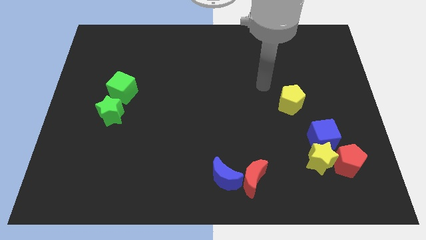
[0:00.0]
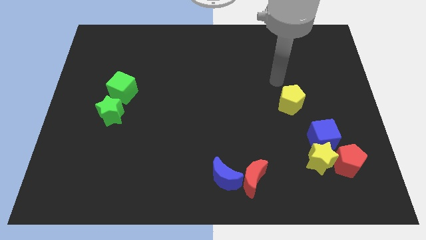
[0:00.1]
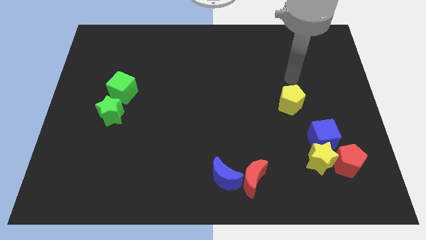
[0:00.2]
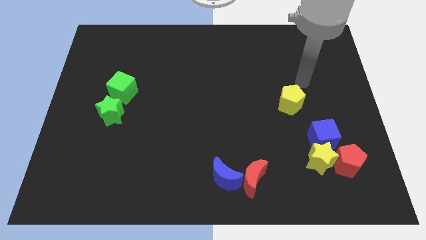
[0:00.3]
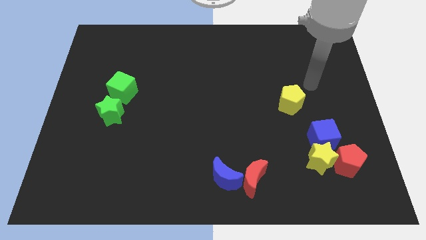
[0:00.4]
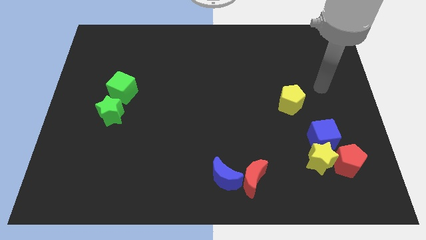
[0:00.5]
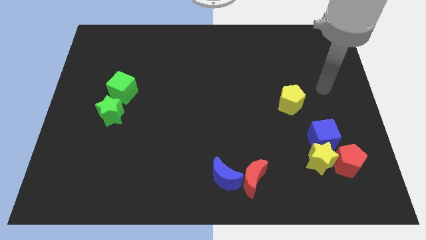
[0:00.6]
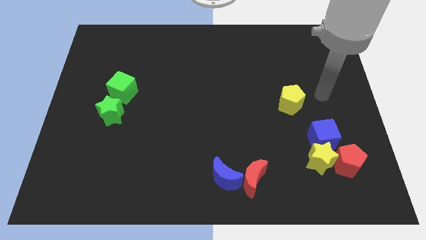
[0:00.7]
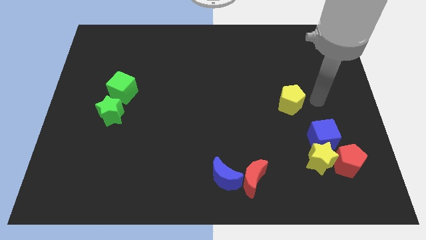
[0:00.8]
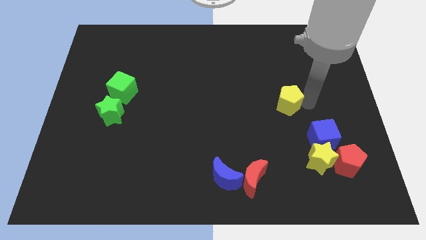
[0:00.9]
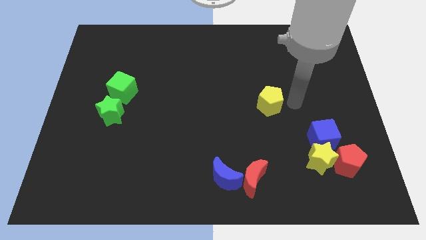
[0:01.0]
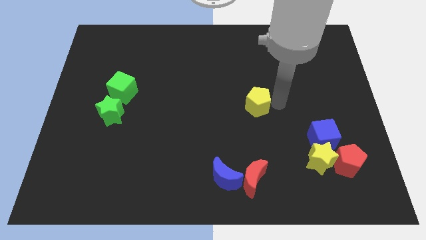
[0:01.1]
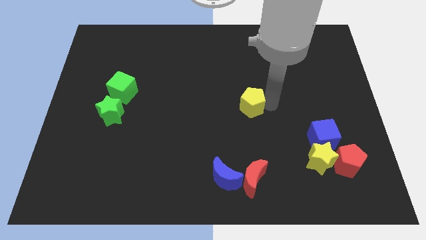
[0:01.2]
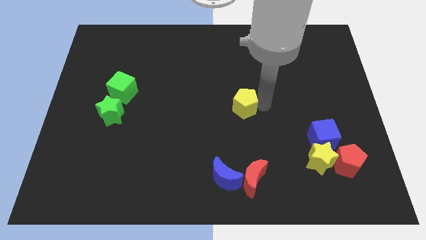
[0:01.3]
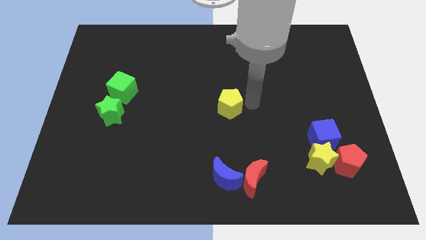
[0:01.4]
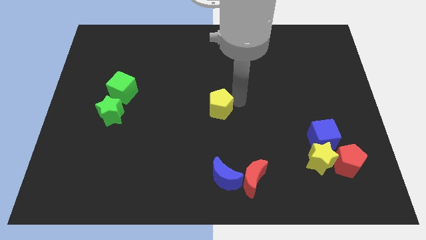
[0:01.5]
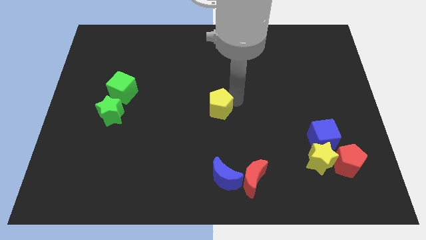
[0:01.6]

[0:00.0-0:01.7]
push the yellow pentagon to the top of the blue crescent

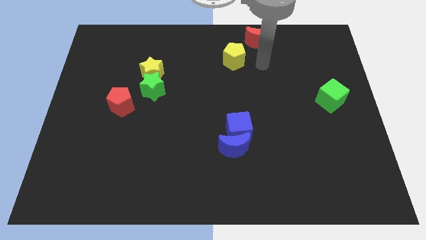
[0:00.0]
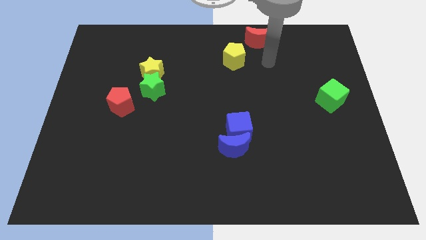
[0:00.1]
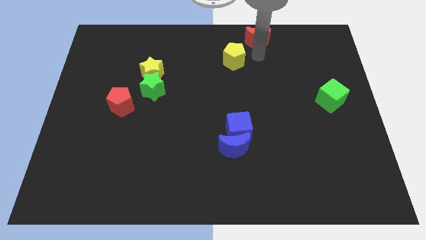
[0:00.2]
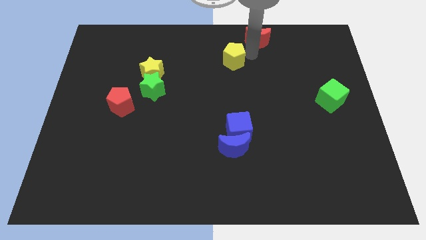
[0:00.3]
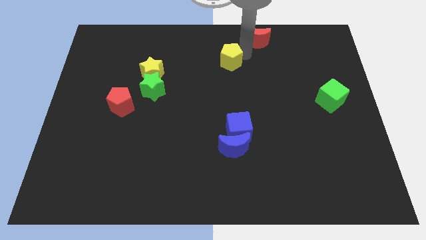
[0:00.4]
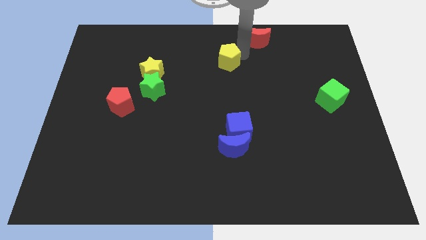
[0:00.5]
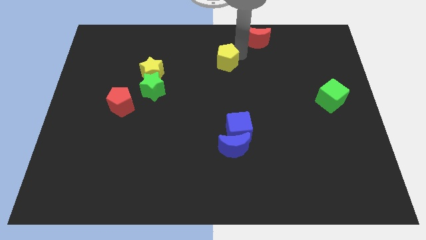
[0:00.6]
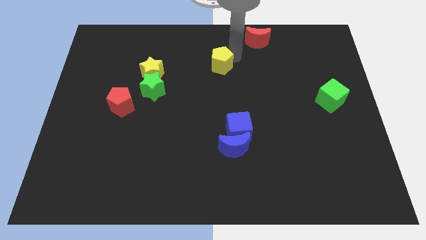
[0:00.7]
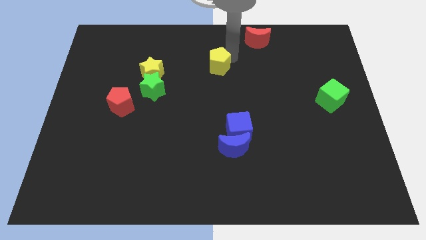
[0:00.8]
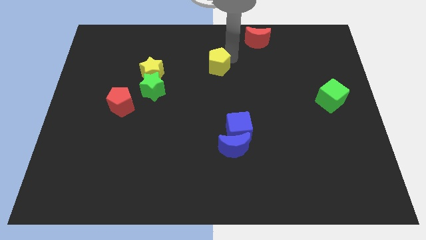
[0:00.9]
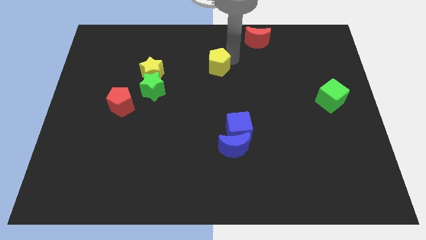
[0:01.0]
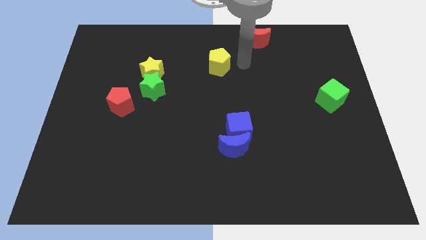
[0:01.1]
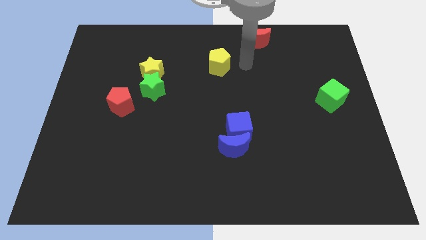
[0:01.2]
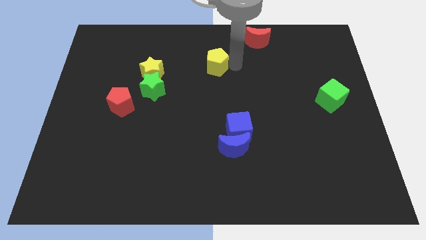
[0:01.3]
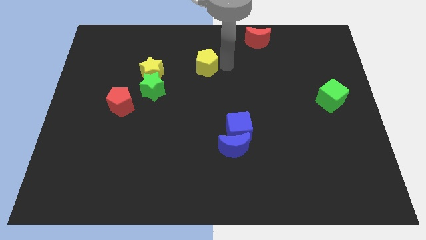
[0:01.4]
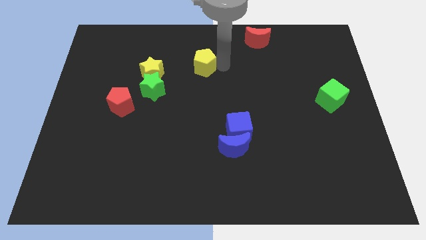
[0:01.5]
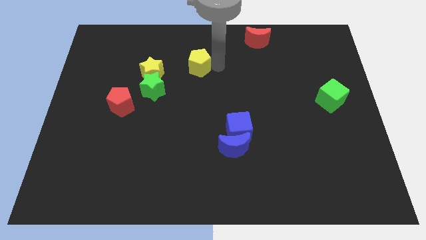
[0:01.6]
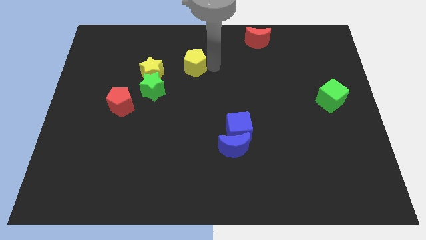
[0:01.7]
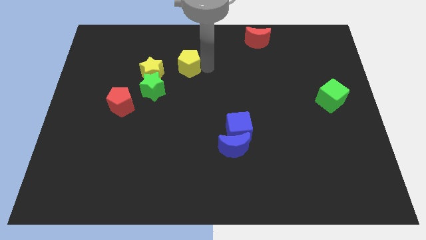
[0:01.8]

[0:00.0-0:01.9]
slide the yellow pentagon towards the yellow star

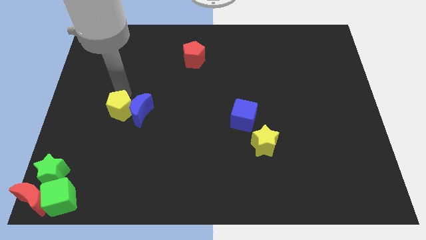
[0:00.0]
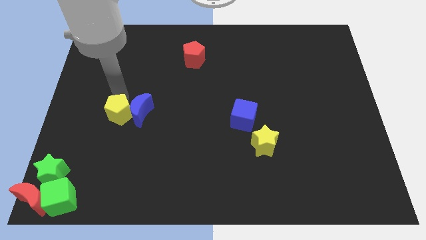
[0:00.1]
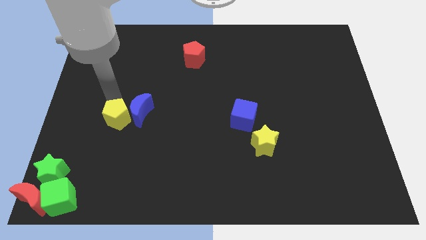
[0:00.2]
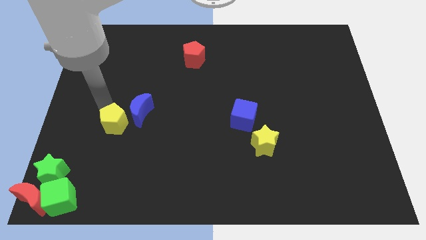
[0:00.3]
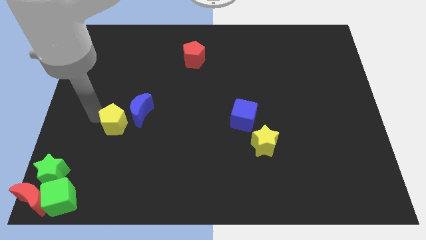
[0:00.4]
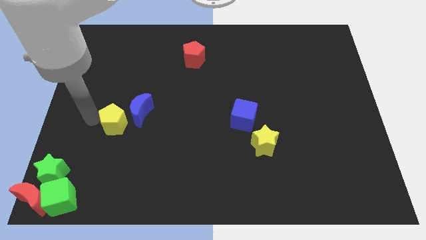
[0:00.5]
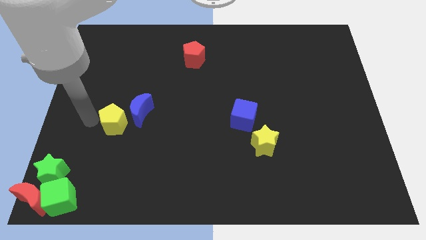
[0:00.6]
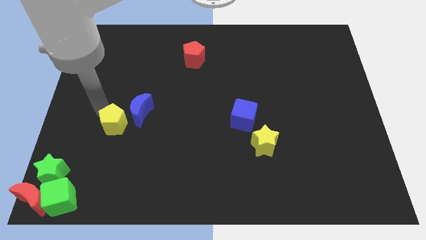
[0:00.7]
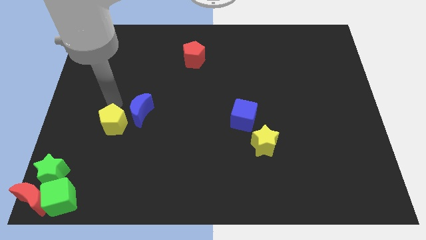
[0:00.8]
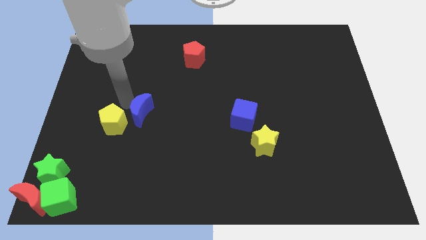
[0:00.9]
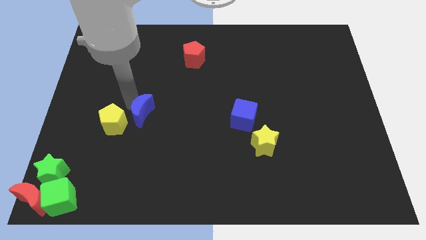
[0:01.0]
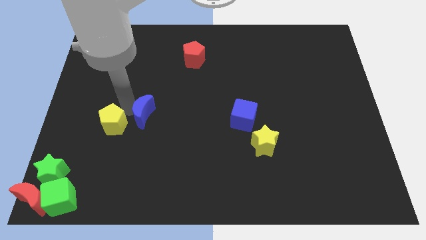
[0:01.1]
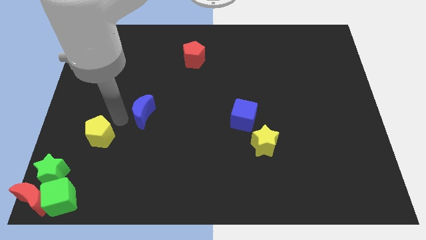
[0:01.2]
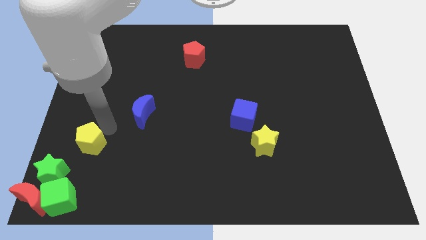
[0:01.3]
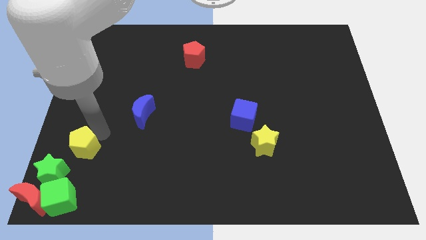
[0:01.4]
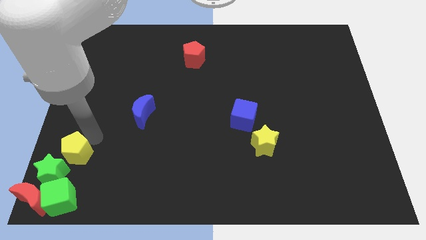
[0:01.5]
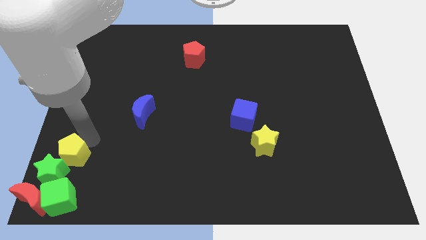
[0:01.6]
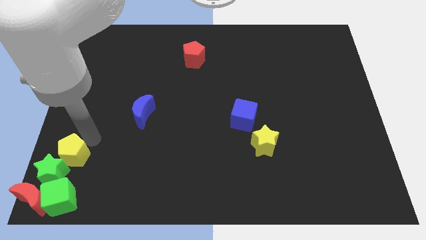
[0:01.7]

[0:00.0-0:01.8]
separate the yellow pentagon from the blue moon

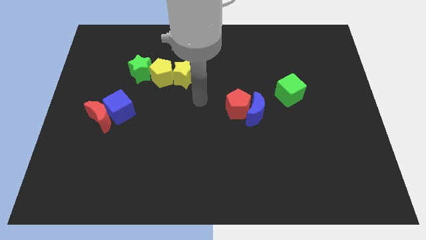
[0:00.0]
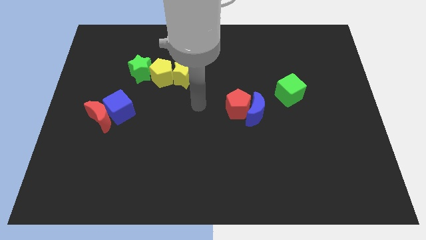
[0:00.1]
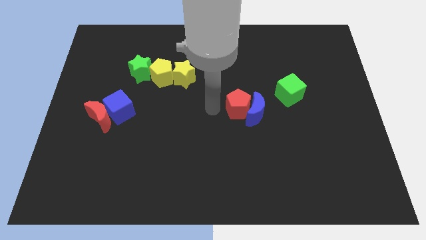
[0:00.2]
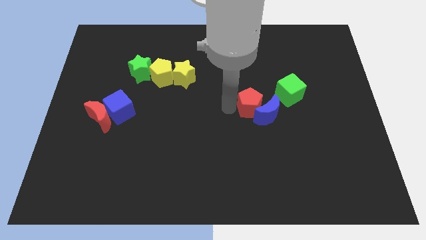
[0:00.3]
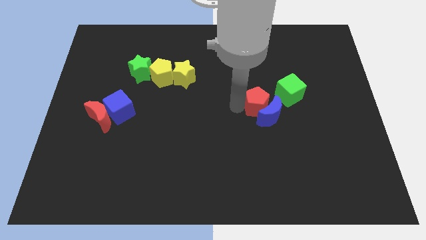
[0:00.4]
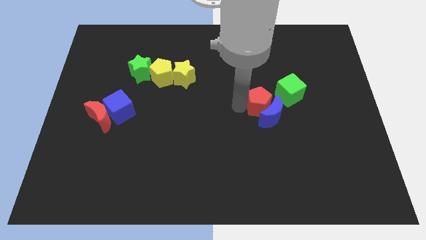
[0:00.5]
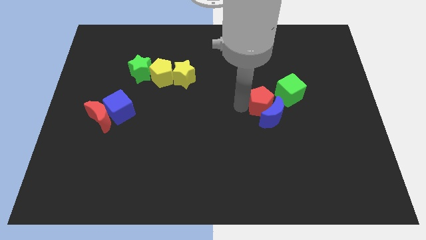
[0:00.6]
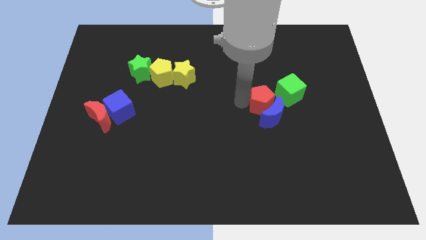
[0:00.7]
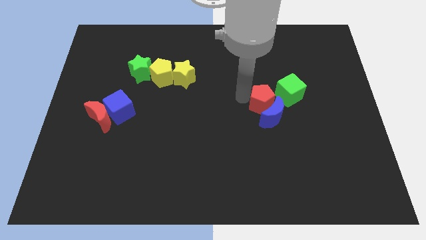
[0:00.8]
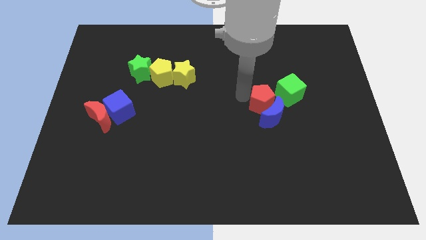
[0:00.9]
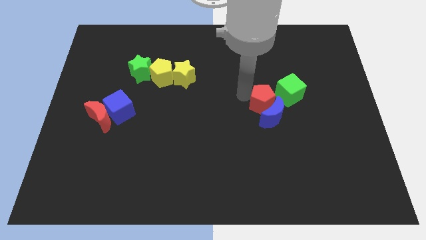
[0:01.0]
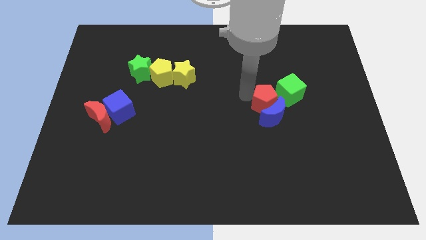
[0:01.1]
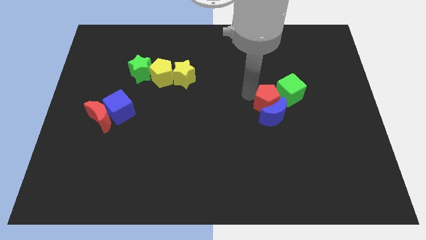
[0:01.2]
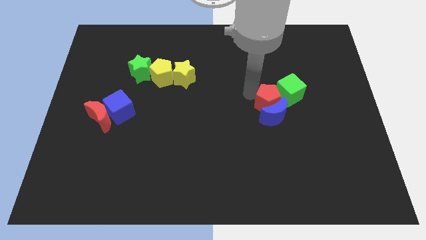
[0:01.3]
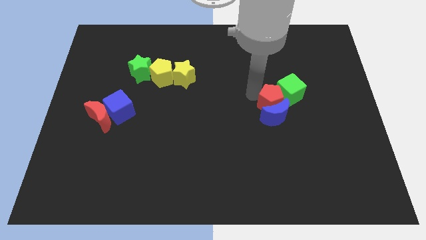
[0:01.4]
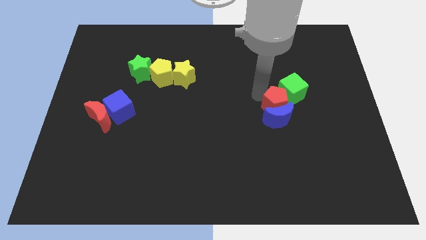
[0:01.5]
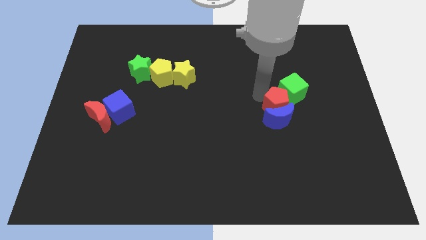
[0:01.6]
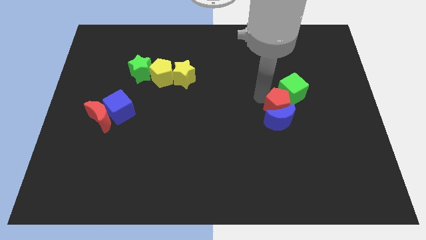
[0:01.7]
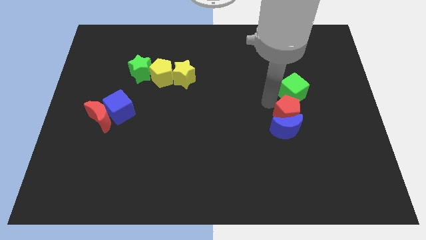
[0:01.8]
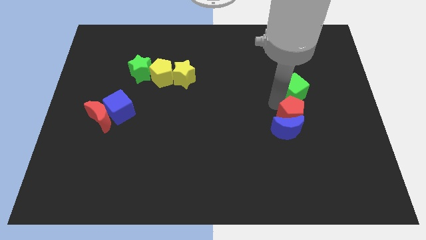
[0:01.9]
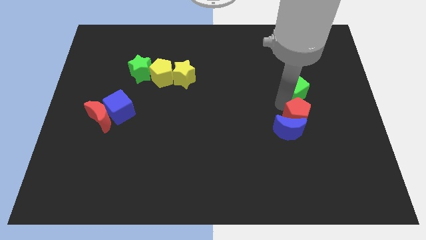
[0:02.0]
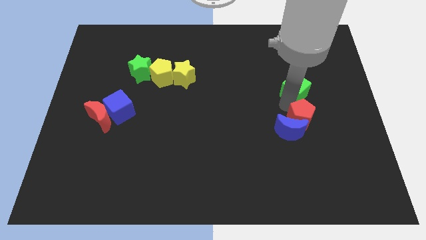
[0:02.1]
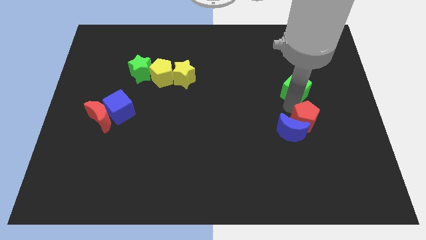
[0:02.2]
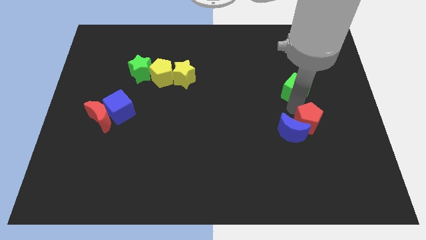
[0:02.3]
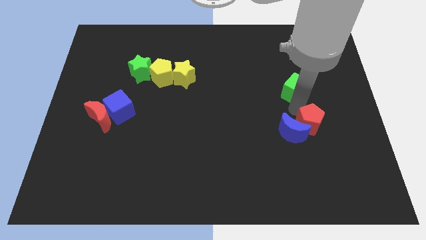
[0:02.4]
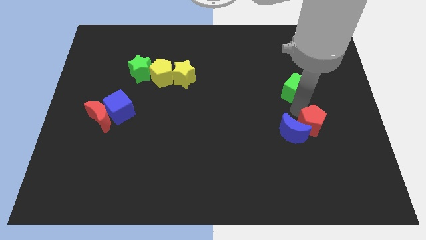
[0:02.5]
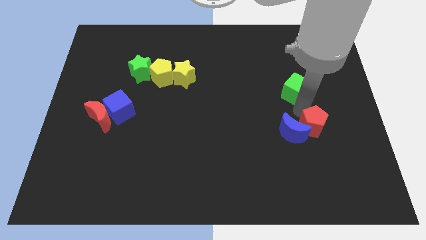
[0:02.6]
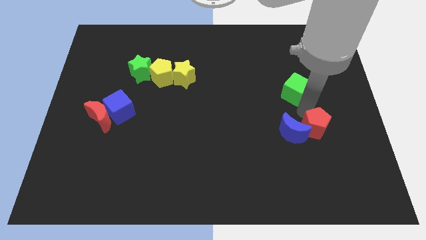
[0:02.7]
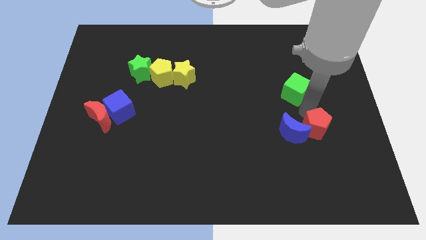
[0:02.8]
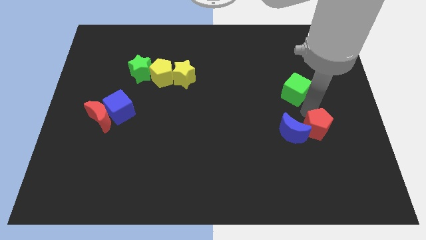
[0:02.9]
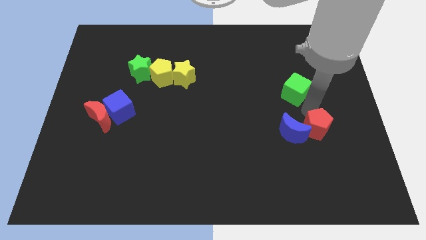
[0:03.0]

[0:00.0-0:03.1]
move the red pentagon towards the center right

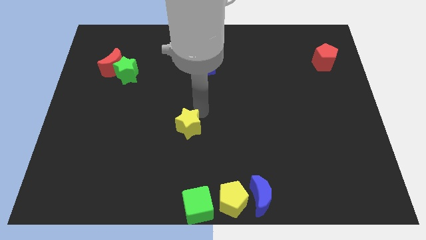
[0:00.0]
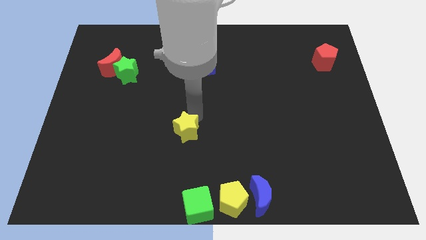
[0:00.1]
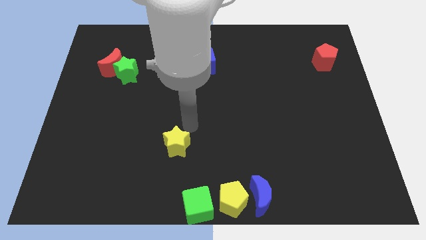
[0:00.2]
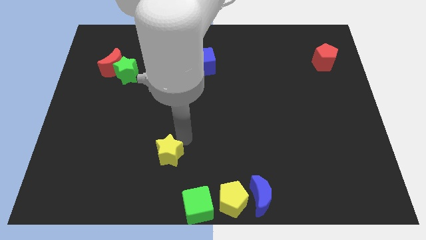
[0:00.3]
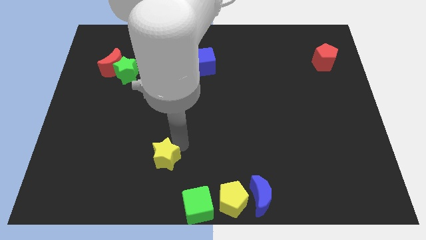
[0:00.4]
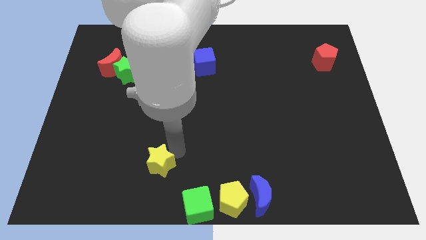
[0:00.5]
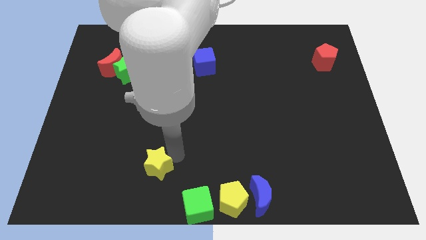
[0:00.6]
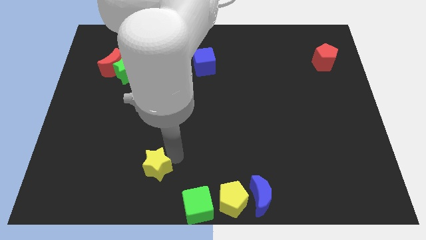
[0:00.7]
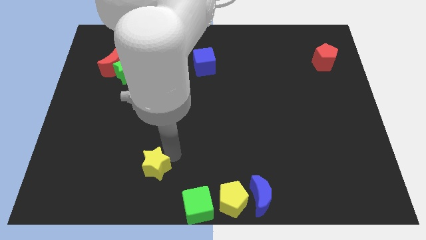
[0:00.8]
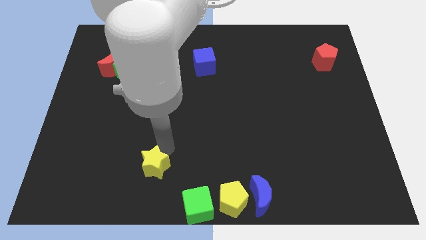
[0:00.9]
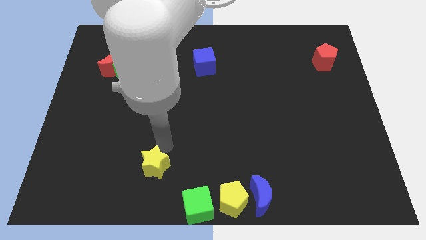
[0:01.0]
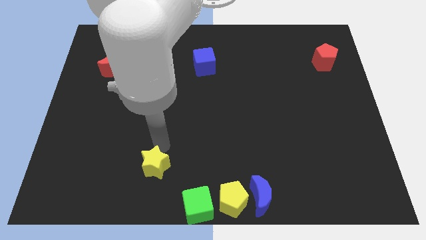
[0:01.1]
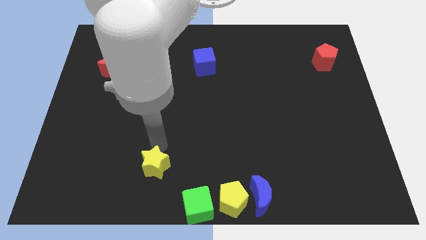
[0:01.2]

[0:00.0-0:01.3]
move the yellow star to the top left of the green cube
